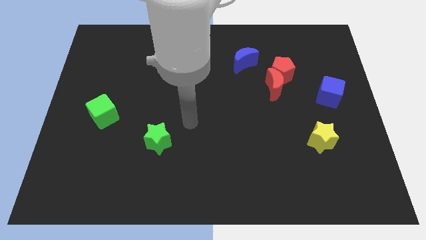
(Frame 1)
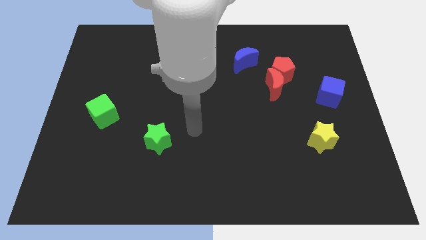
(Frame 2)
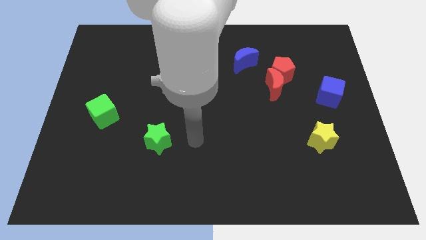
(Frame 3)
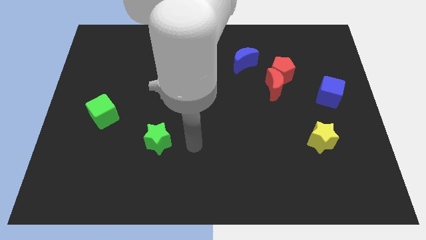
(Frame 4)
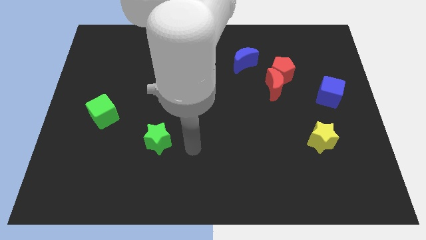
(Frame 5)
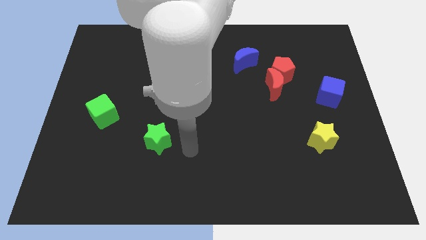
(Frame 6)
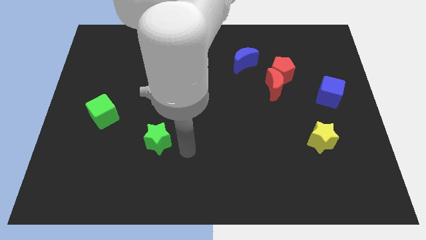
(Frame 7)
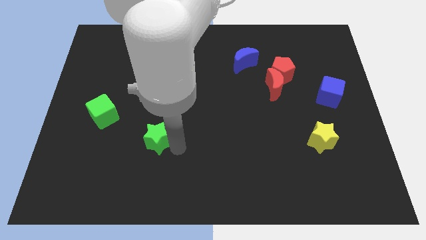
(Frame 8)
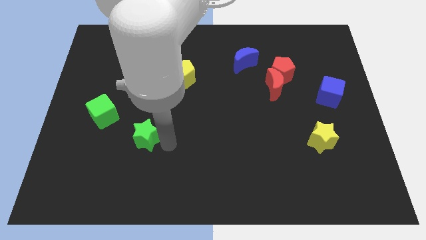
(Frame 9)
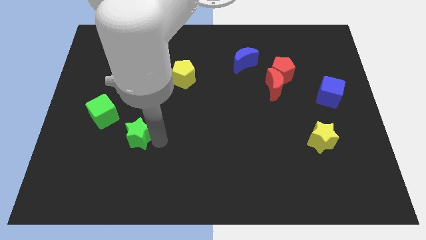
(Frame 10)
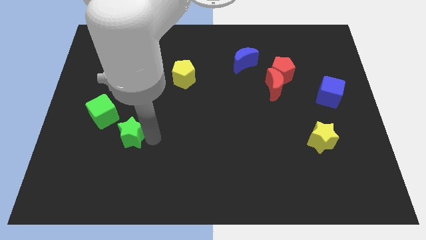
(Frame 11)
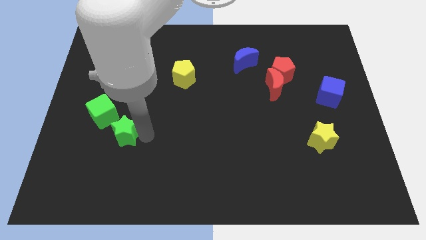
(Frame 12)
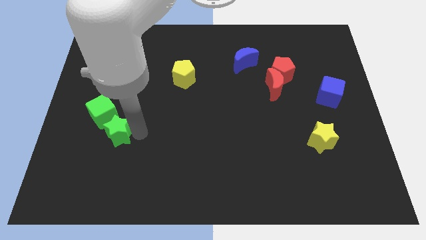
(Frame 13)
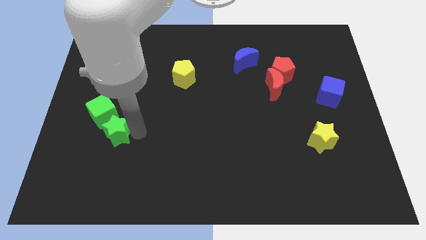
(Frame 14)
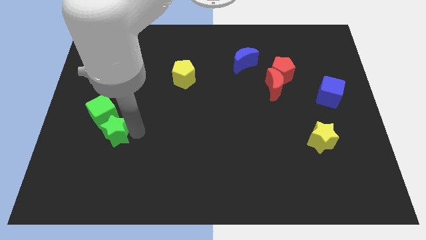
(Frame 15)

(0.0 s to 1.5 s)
move the green star close to the green cube

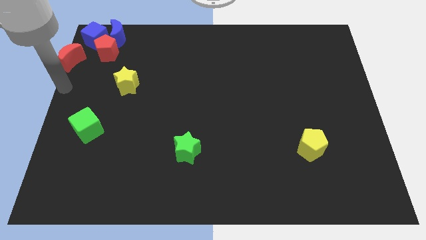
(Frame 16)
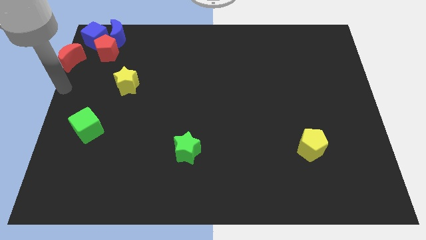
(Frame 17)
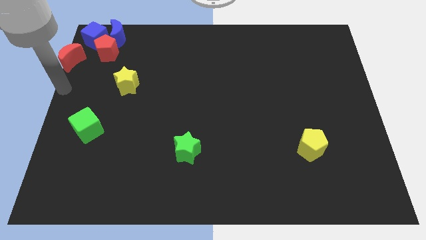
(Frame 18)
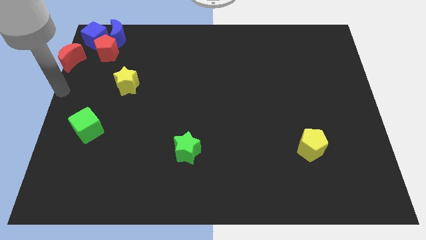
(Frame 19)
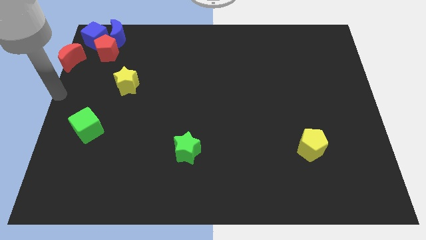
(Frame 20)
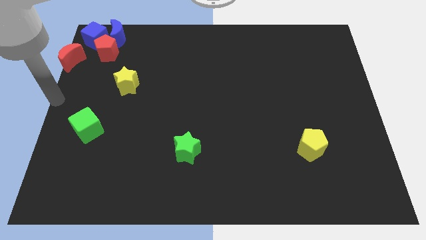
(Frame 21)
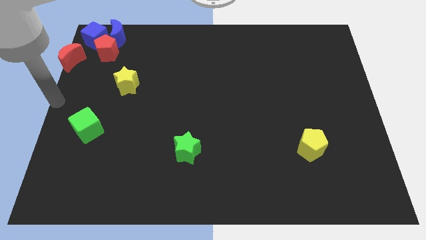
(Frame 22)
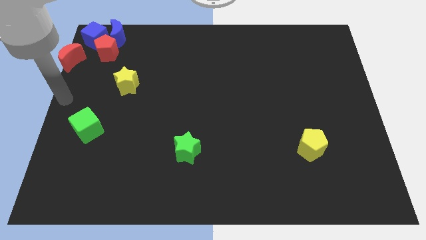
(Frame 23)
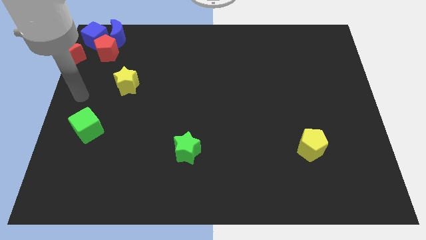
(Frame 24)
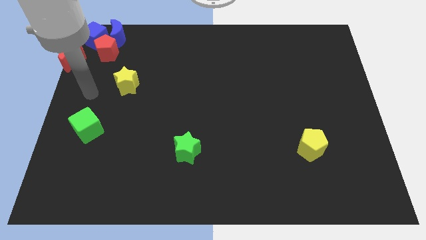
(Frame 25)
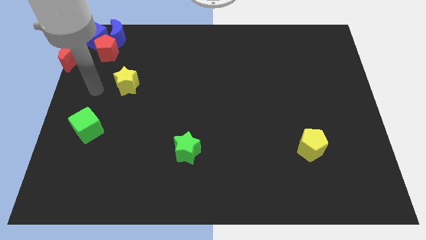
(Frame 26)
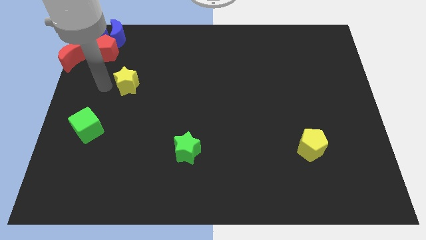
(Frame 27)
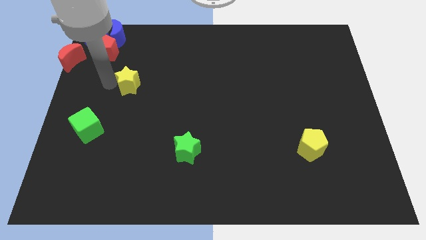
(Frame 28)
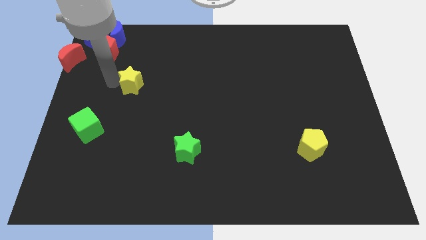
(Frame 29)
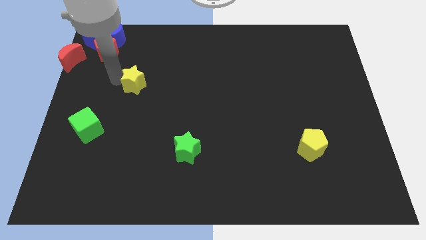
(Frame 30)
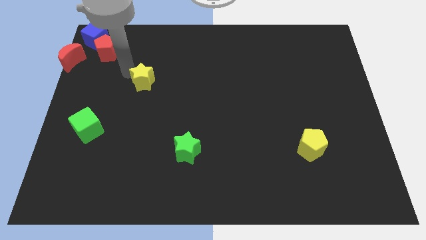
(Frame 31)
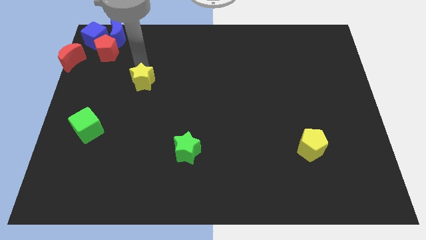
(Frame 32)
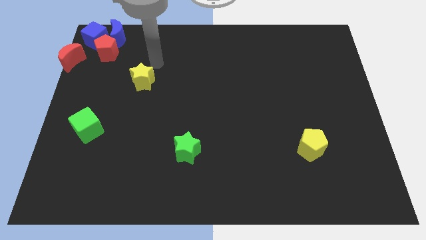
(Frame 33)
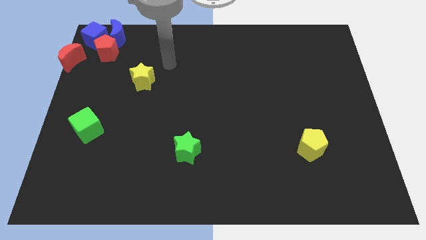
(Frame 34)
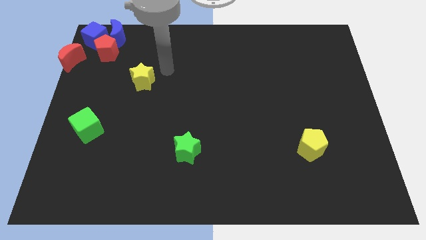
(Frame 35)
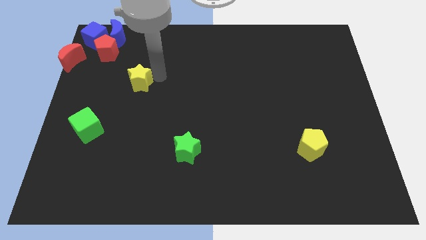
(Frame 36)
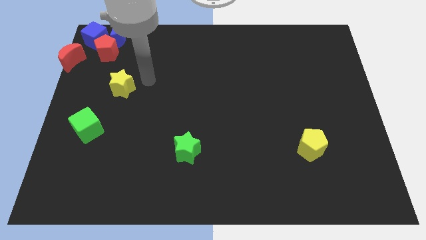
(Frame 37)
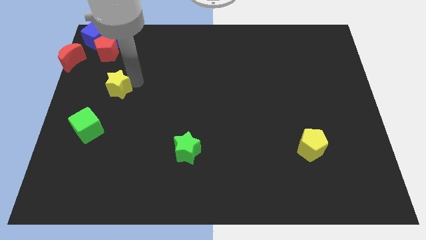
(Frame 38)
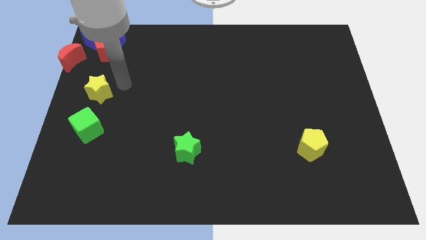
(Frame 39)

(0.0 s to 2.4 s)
push yellow star below red pentagon

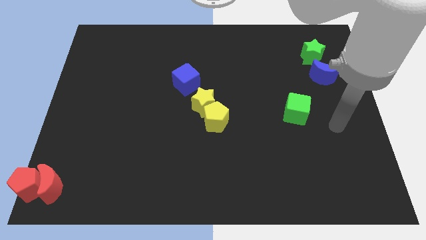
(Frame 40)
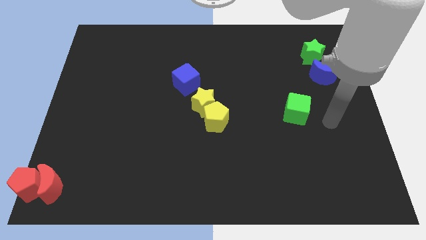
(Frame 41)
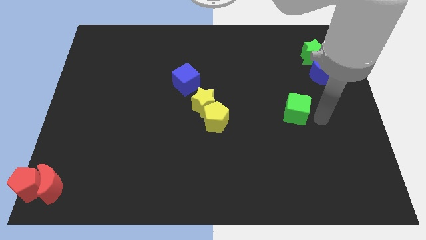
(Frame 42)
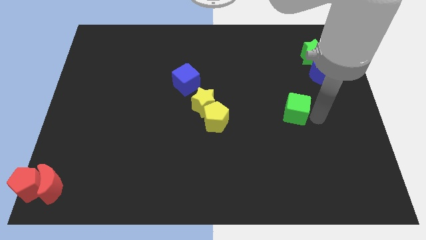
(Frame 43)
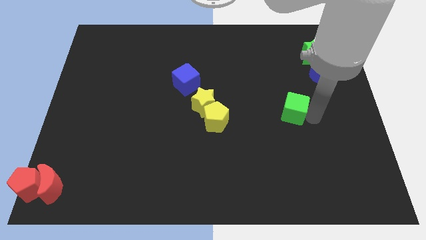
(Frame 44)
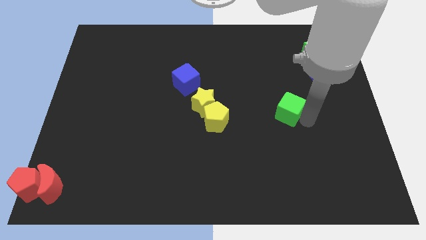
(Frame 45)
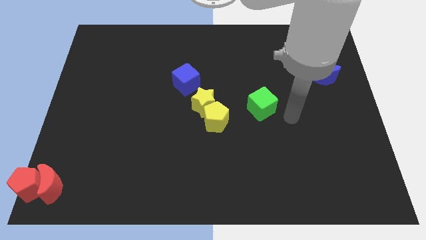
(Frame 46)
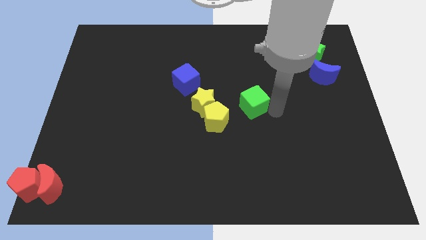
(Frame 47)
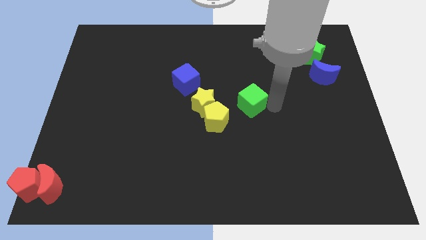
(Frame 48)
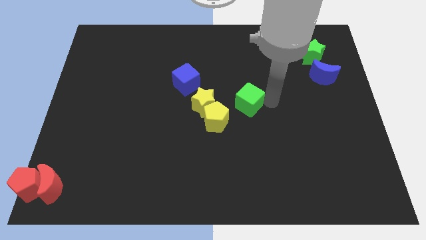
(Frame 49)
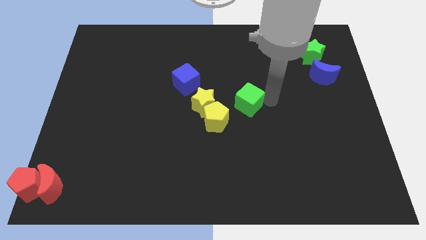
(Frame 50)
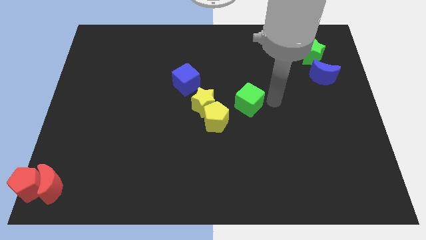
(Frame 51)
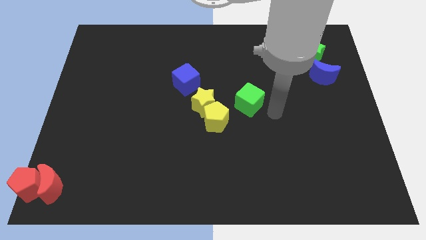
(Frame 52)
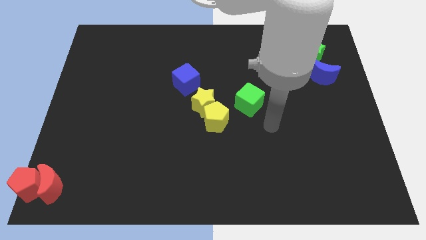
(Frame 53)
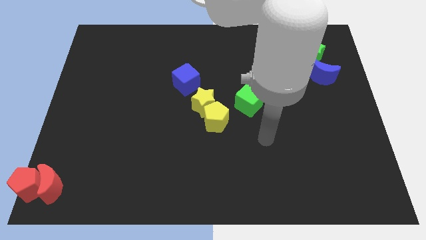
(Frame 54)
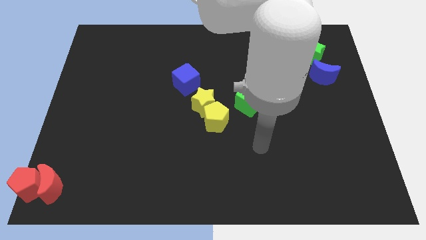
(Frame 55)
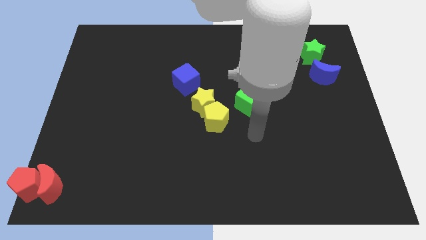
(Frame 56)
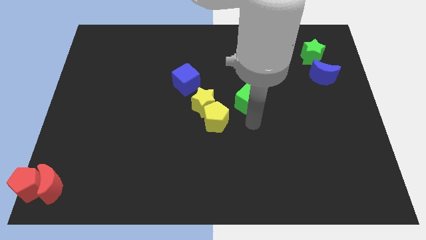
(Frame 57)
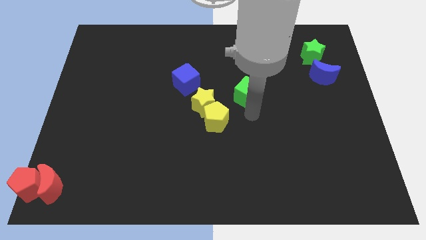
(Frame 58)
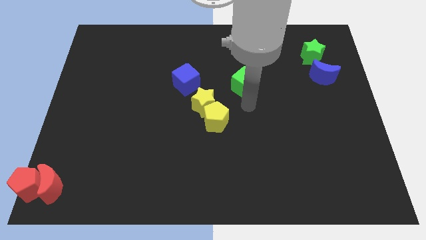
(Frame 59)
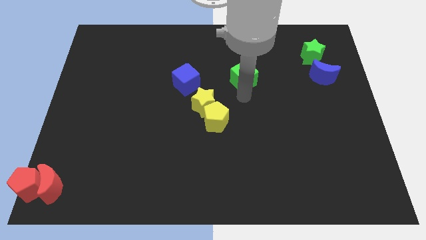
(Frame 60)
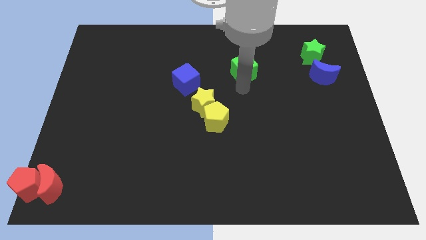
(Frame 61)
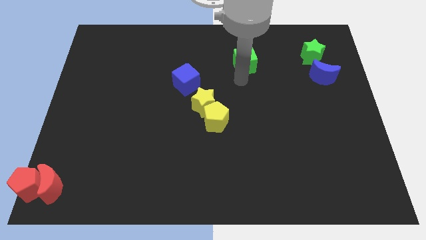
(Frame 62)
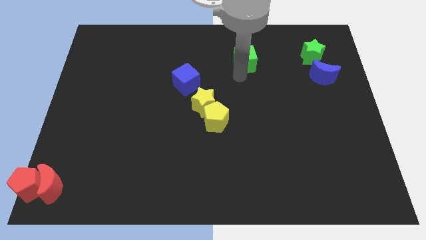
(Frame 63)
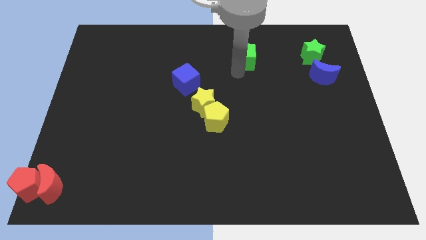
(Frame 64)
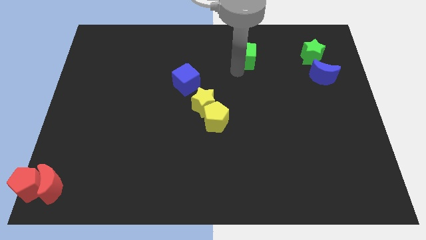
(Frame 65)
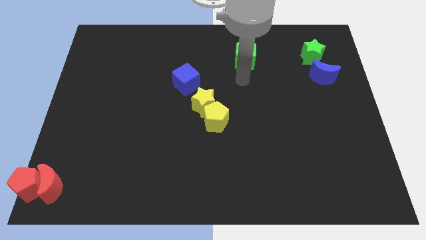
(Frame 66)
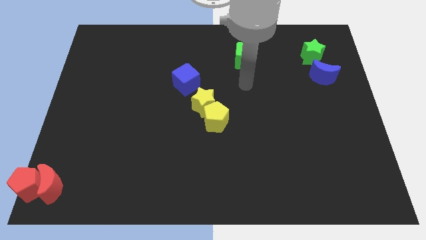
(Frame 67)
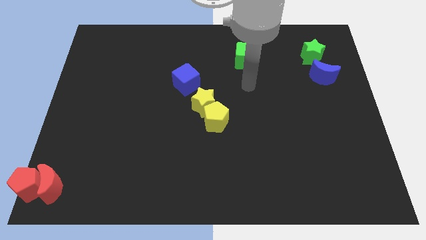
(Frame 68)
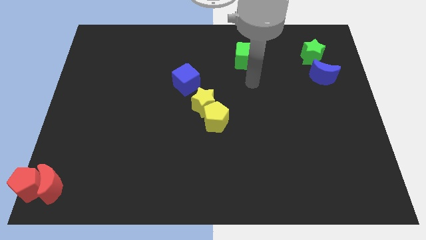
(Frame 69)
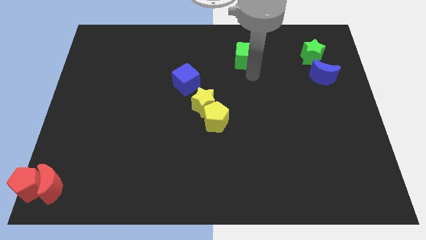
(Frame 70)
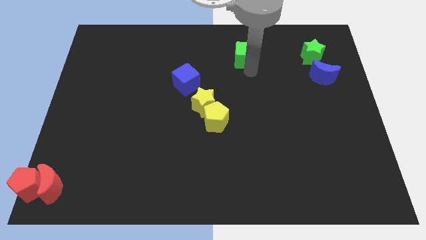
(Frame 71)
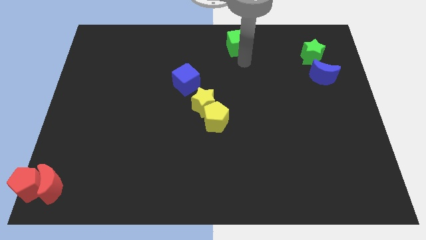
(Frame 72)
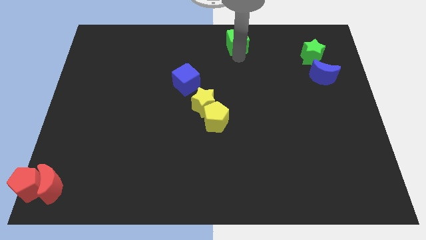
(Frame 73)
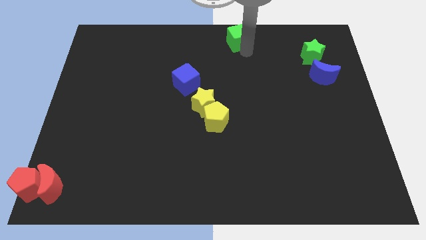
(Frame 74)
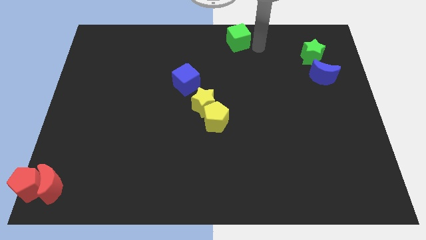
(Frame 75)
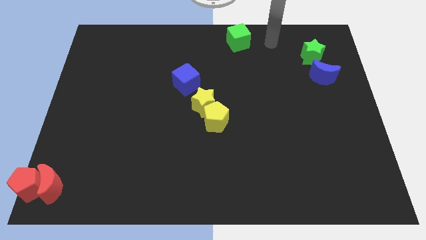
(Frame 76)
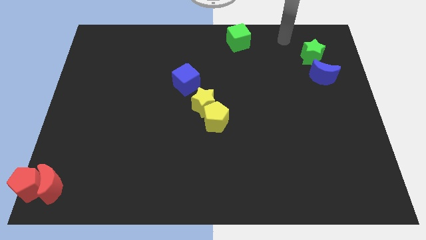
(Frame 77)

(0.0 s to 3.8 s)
push the green cube to the top center

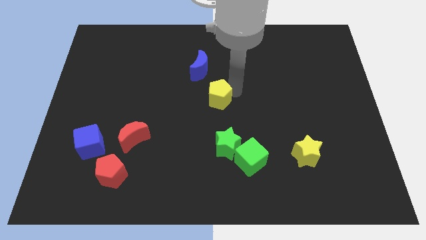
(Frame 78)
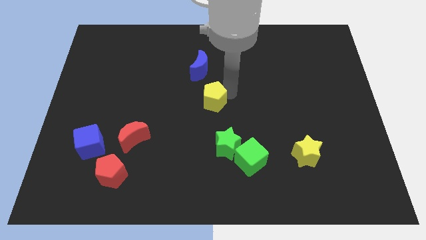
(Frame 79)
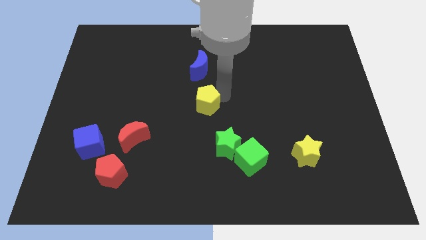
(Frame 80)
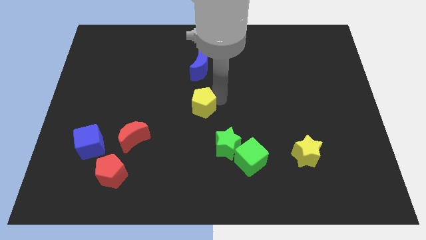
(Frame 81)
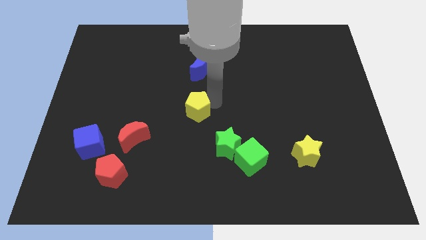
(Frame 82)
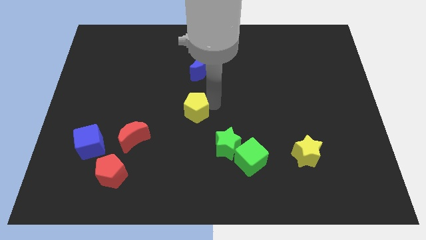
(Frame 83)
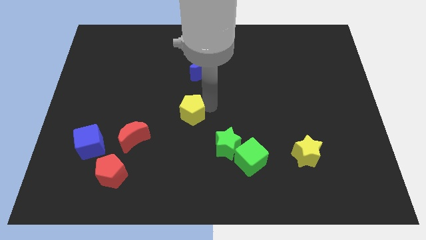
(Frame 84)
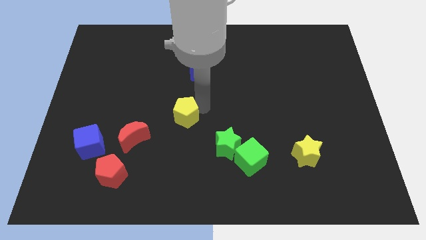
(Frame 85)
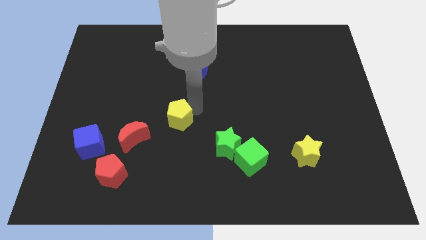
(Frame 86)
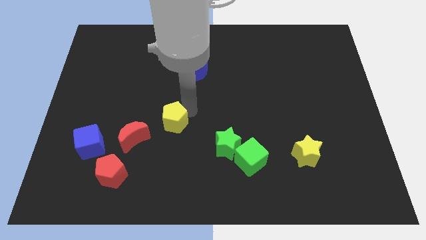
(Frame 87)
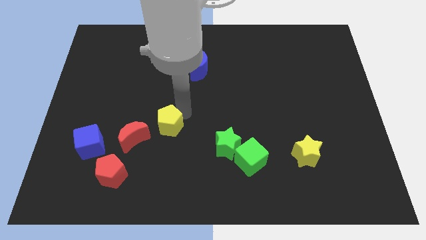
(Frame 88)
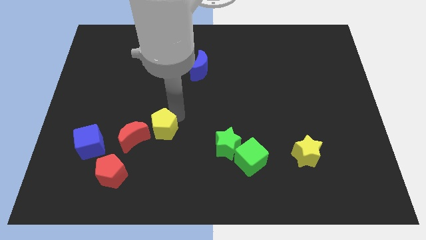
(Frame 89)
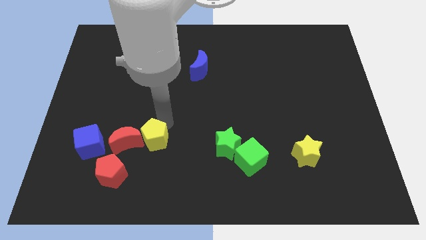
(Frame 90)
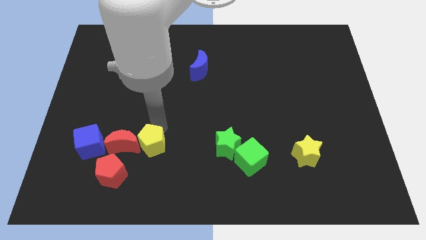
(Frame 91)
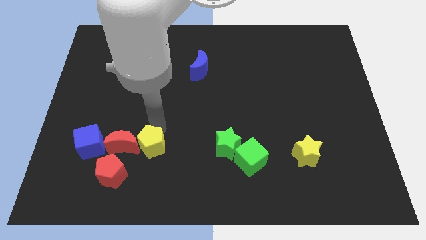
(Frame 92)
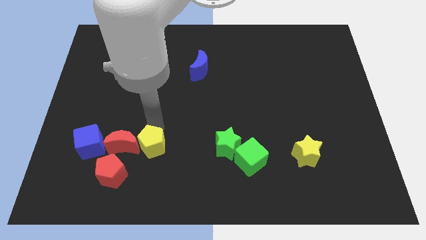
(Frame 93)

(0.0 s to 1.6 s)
push yellow pentagon into the red moon
